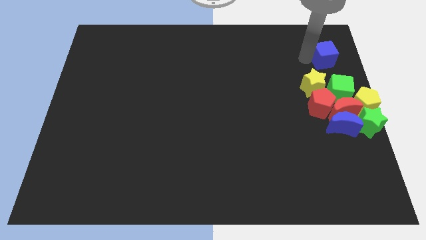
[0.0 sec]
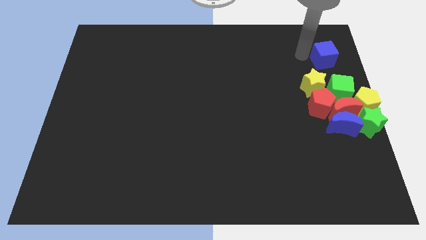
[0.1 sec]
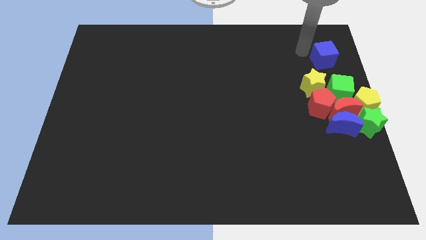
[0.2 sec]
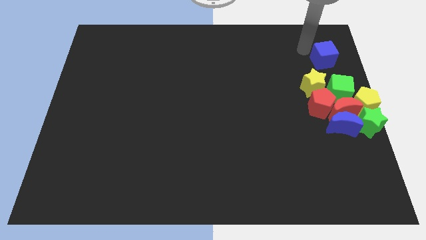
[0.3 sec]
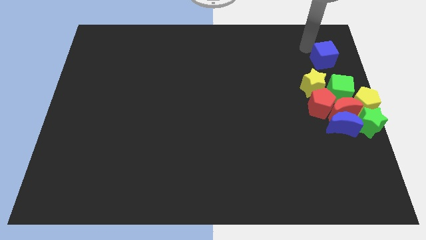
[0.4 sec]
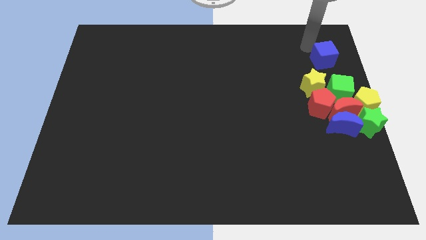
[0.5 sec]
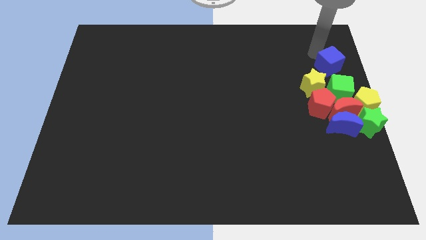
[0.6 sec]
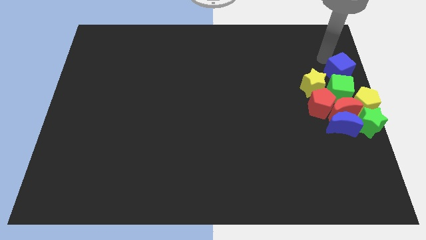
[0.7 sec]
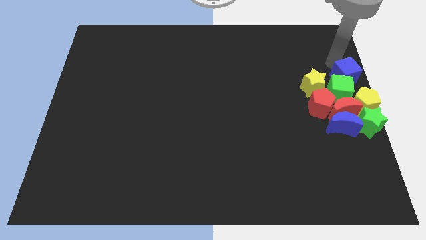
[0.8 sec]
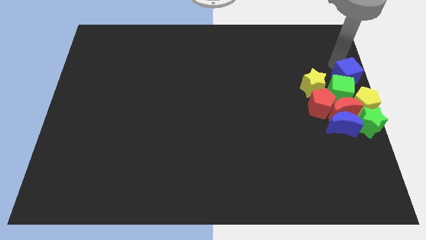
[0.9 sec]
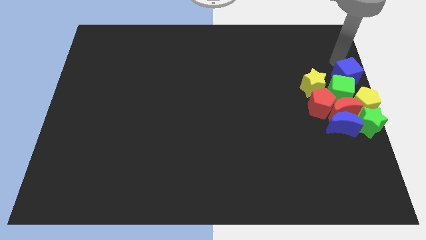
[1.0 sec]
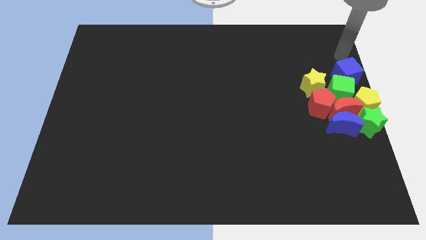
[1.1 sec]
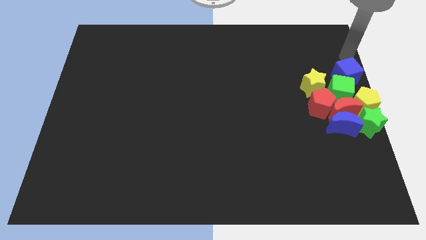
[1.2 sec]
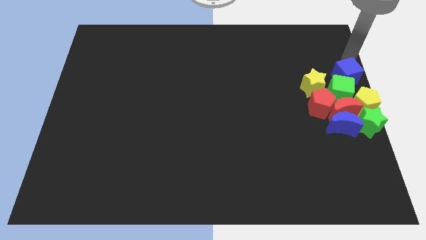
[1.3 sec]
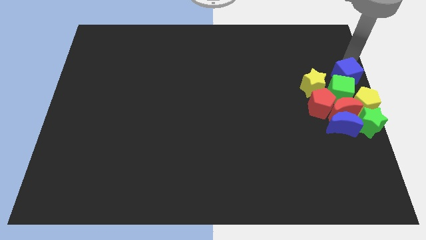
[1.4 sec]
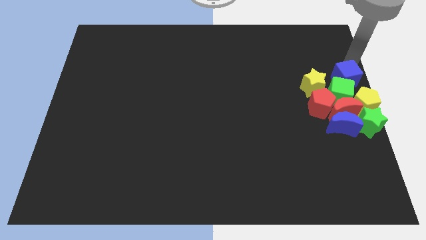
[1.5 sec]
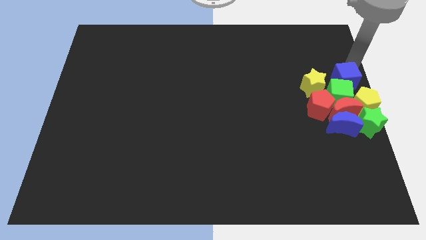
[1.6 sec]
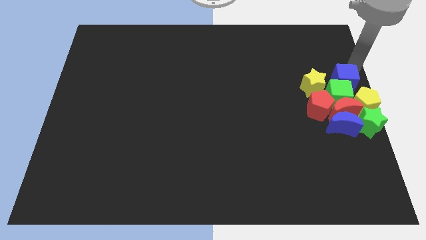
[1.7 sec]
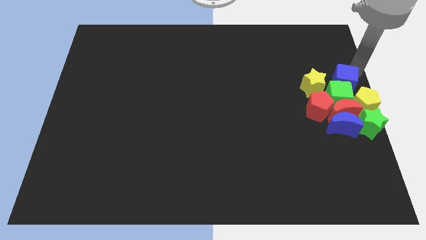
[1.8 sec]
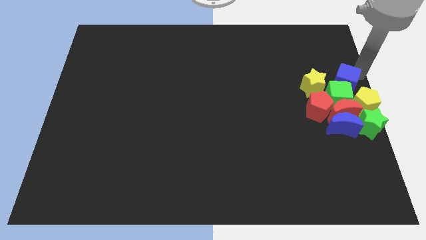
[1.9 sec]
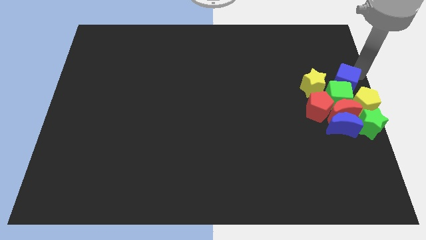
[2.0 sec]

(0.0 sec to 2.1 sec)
move the blue cube into the green cube

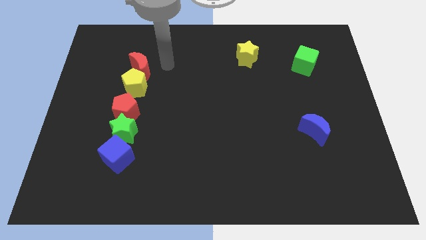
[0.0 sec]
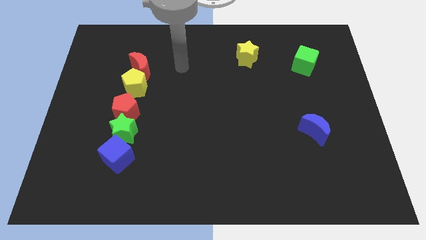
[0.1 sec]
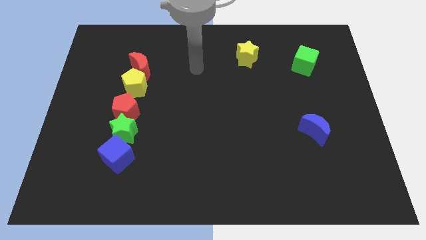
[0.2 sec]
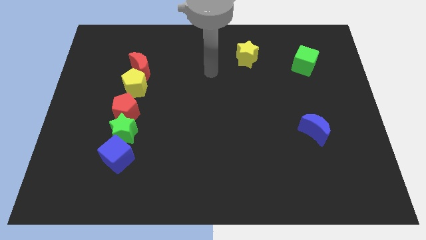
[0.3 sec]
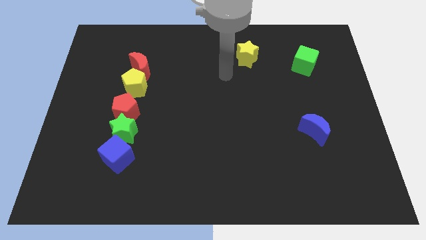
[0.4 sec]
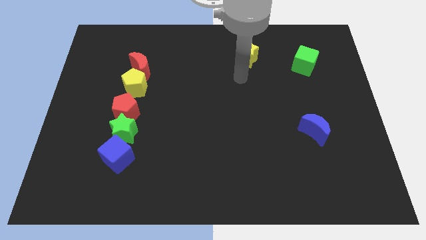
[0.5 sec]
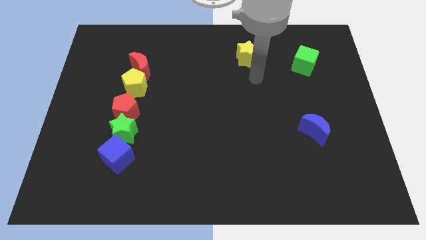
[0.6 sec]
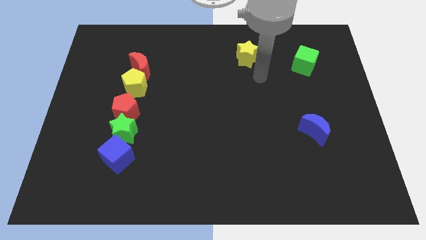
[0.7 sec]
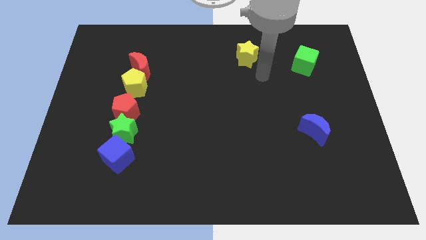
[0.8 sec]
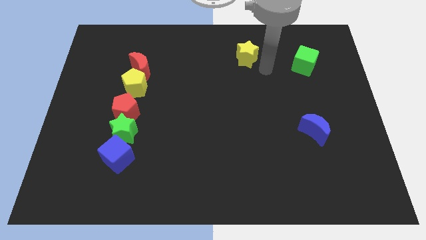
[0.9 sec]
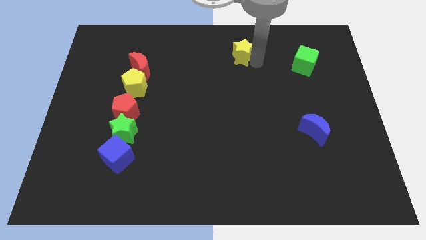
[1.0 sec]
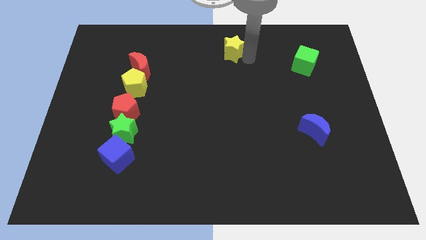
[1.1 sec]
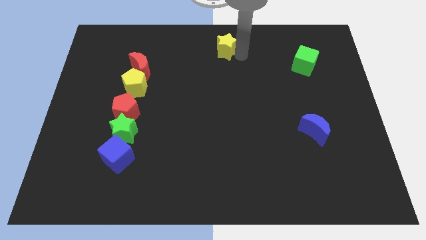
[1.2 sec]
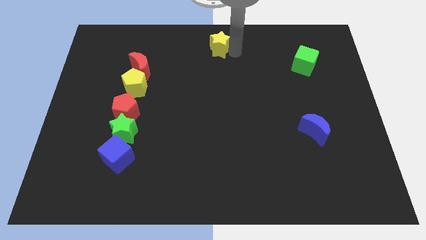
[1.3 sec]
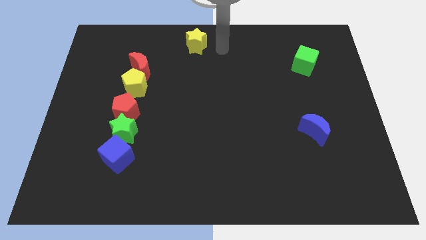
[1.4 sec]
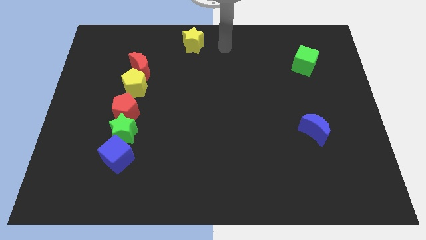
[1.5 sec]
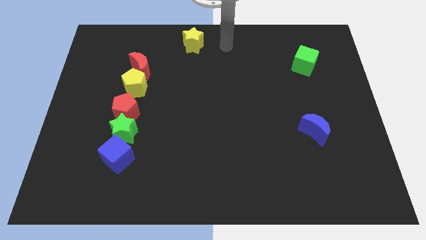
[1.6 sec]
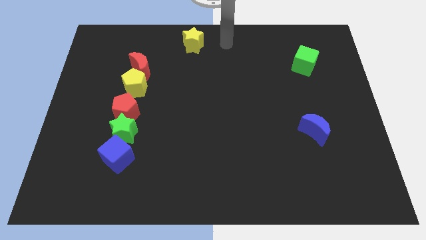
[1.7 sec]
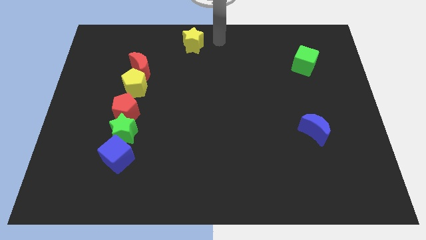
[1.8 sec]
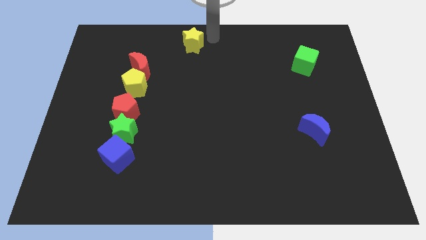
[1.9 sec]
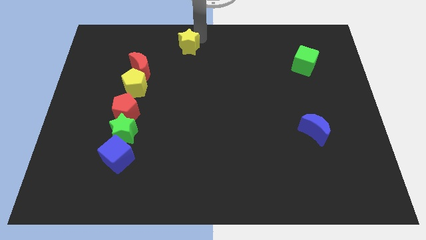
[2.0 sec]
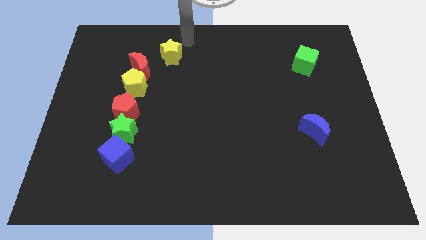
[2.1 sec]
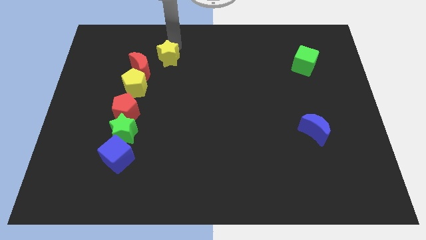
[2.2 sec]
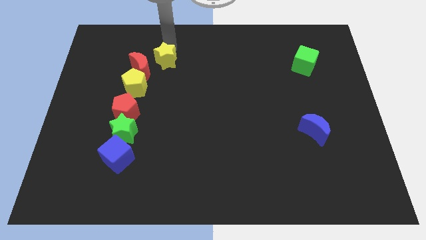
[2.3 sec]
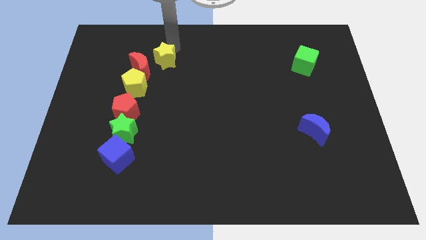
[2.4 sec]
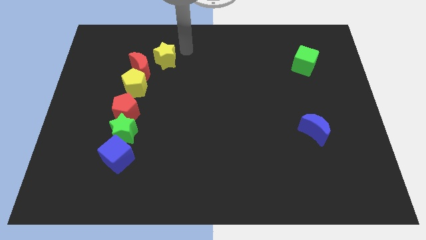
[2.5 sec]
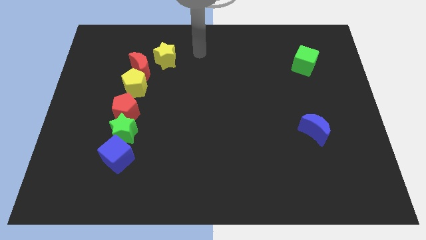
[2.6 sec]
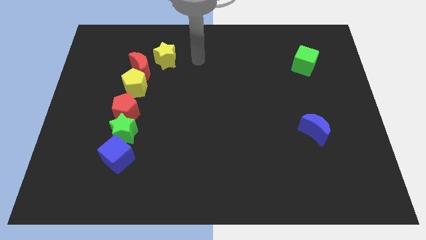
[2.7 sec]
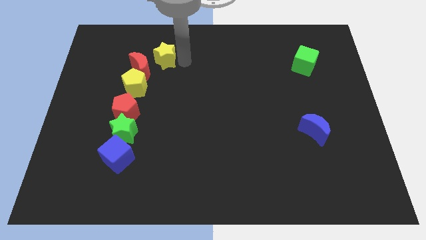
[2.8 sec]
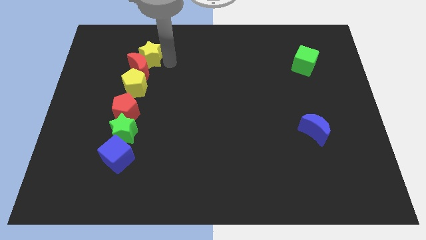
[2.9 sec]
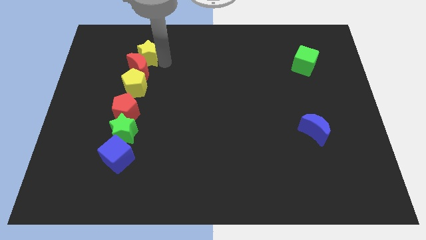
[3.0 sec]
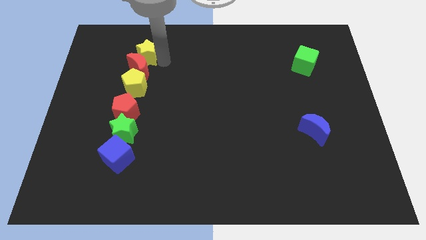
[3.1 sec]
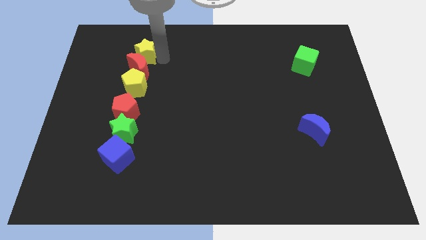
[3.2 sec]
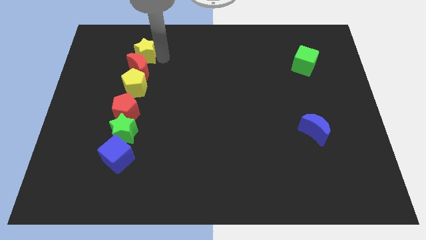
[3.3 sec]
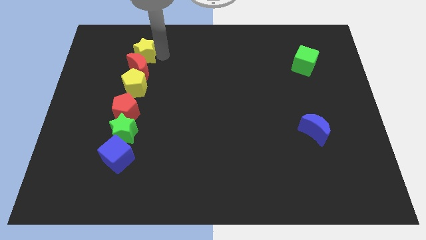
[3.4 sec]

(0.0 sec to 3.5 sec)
move the yellow star to the top of the red crescent

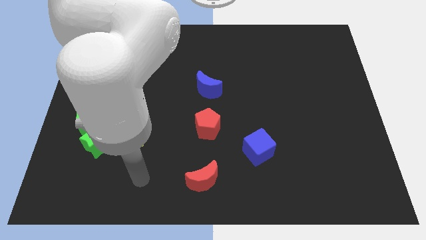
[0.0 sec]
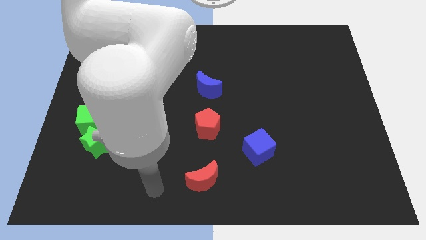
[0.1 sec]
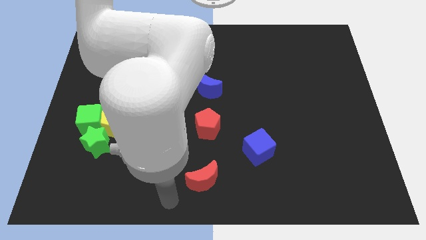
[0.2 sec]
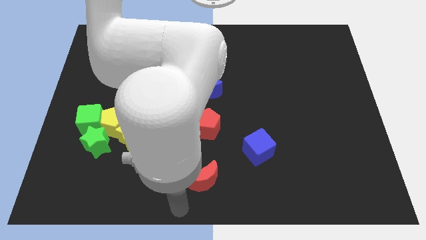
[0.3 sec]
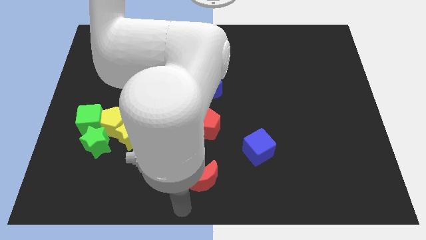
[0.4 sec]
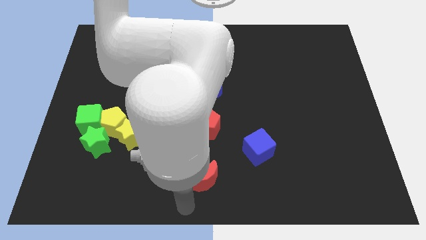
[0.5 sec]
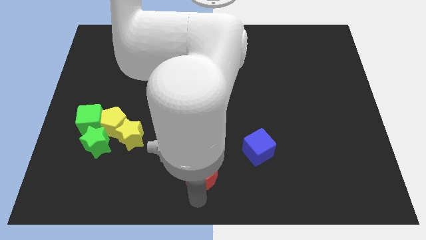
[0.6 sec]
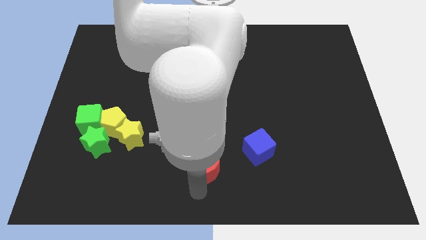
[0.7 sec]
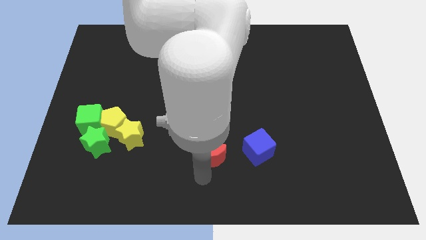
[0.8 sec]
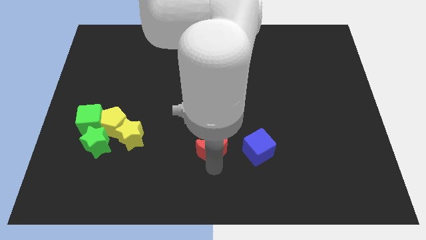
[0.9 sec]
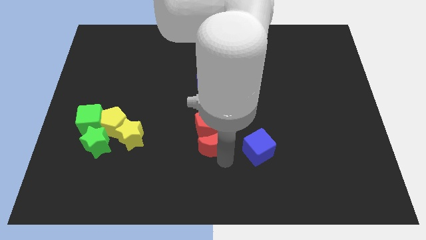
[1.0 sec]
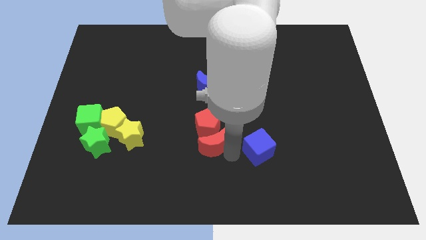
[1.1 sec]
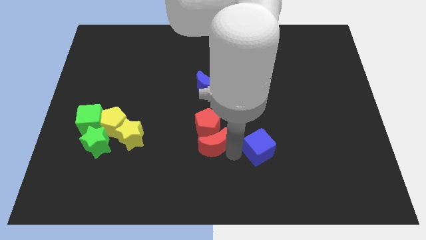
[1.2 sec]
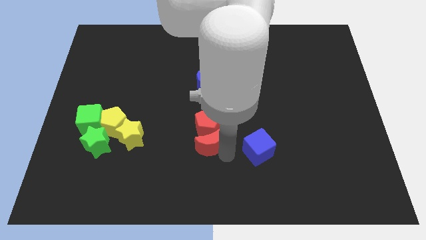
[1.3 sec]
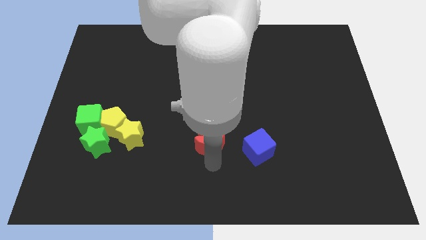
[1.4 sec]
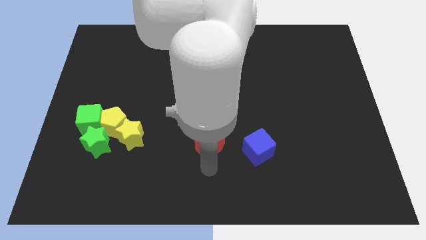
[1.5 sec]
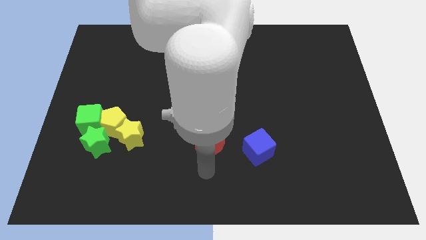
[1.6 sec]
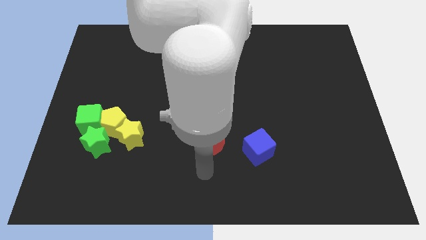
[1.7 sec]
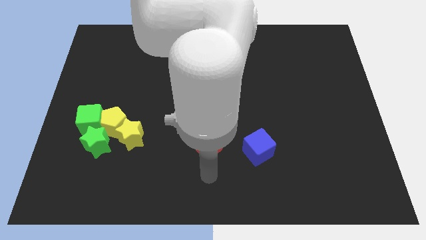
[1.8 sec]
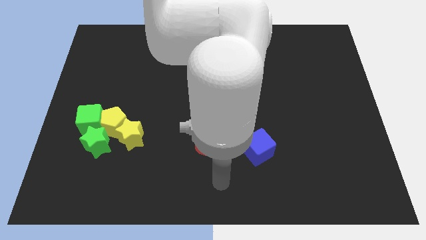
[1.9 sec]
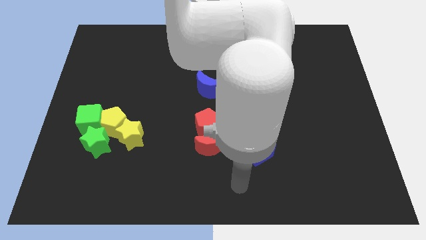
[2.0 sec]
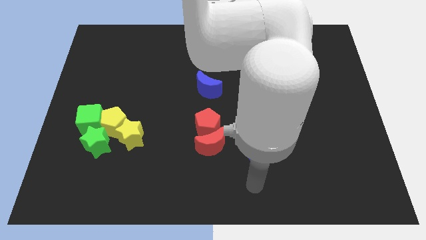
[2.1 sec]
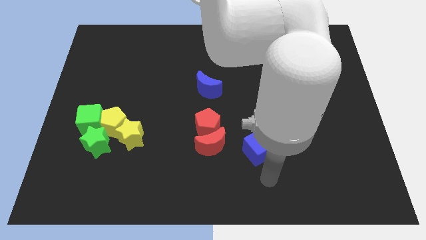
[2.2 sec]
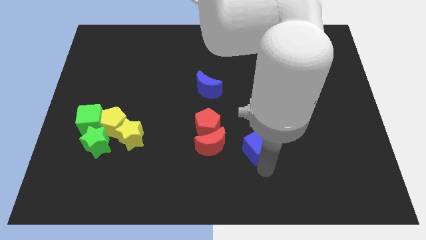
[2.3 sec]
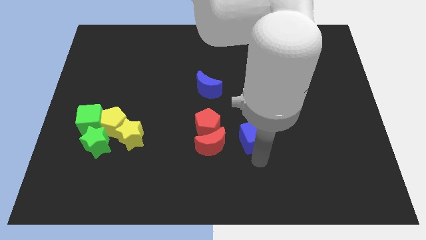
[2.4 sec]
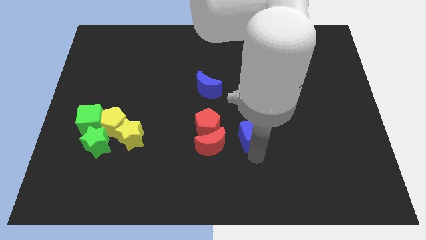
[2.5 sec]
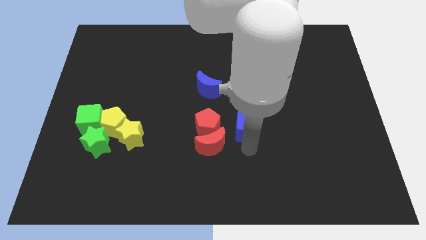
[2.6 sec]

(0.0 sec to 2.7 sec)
place the red crescent into the red pentagon

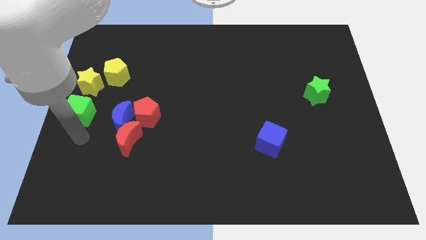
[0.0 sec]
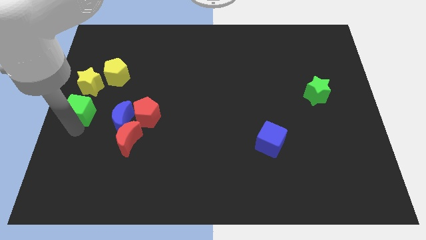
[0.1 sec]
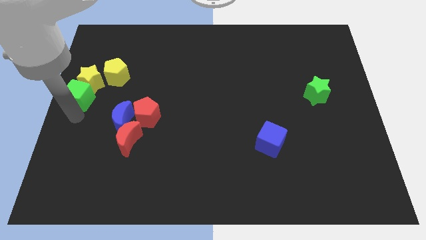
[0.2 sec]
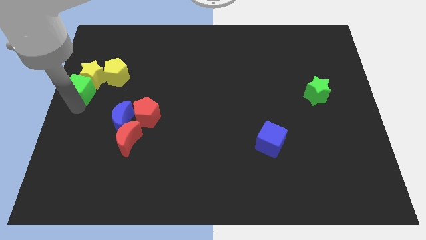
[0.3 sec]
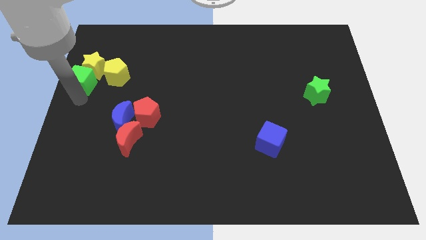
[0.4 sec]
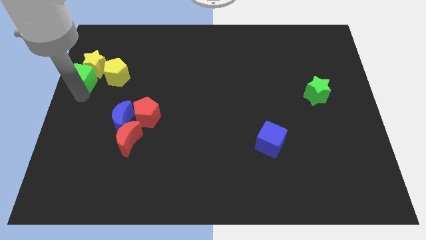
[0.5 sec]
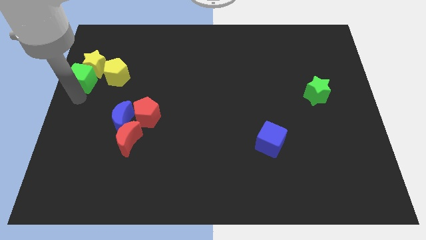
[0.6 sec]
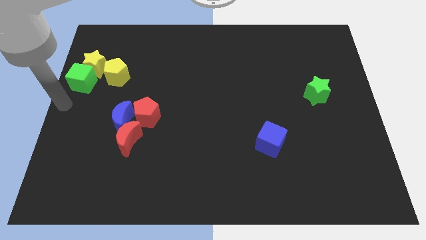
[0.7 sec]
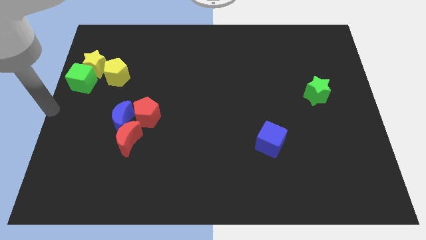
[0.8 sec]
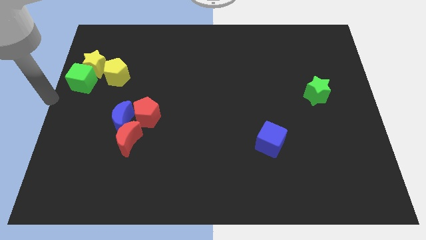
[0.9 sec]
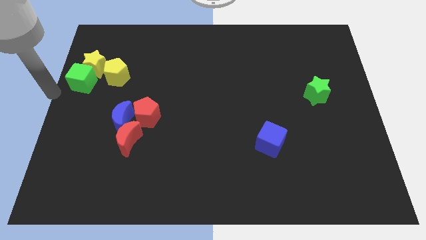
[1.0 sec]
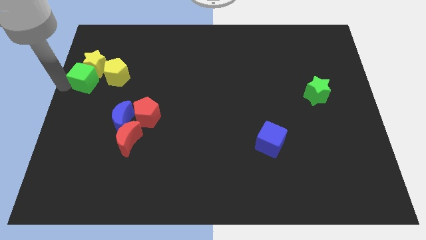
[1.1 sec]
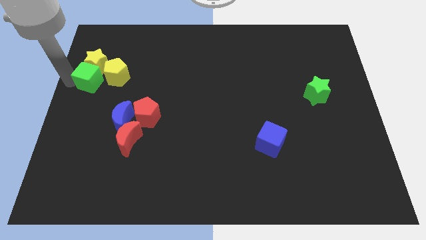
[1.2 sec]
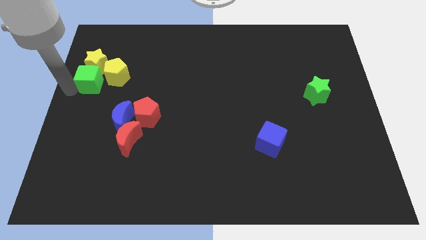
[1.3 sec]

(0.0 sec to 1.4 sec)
push green cube beside yellow pentagon
